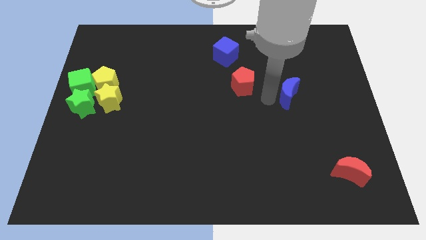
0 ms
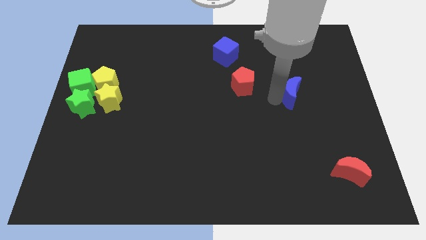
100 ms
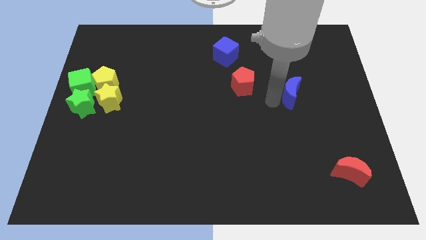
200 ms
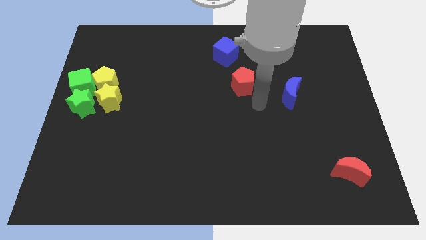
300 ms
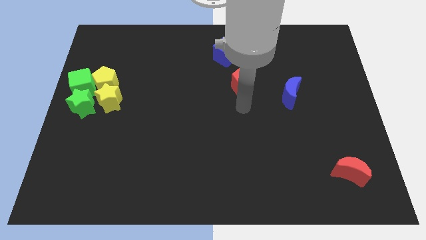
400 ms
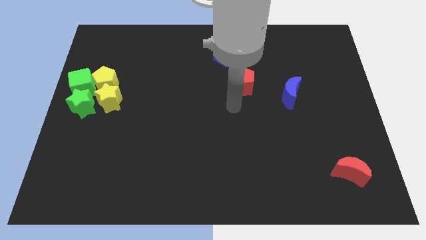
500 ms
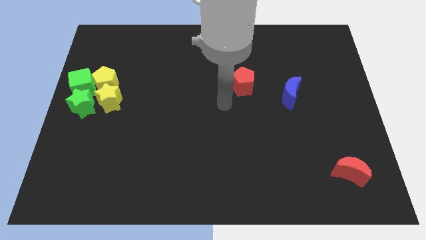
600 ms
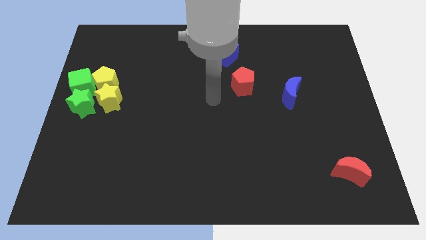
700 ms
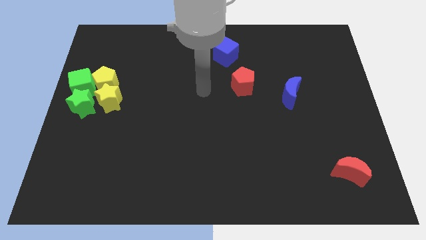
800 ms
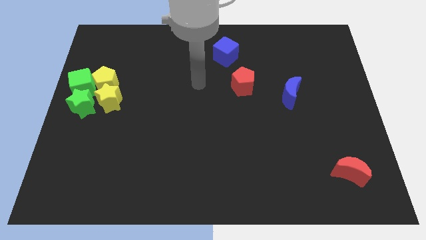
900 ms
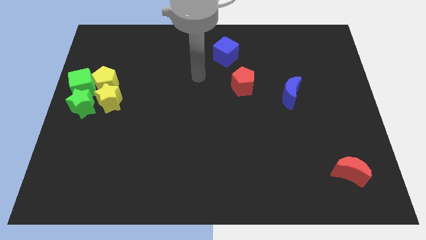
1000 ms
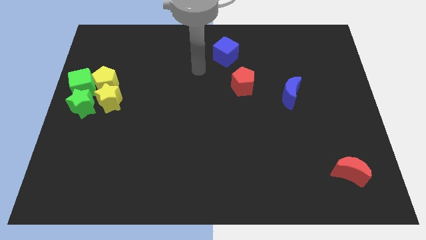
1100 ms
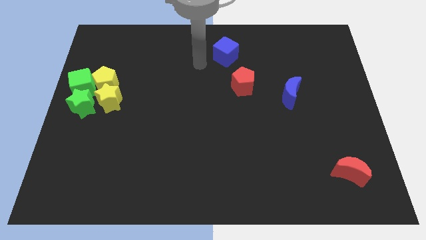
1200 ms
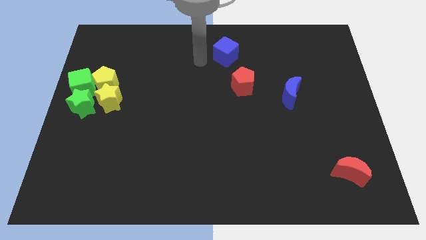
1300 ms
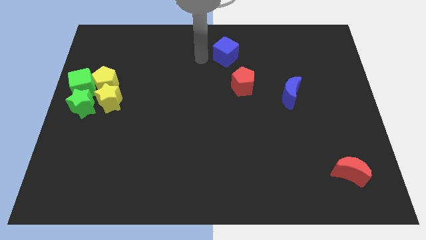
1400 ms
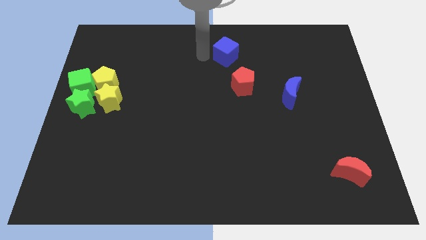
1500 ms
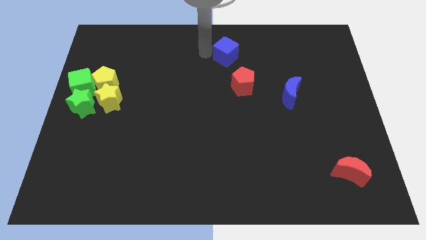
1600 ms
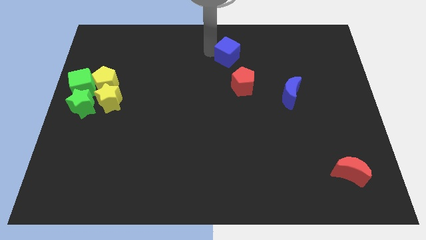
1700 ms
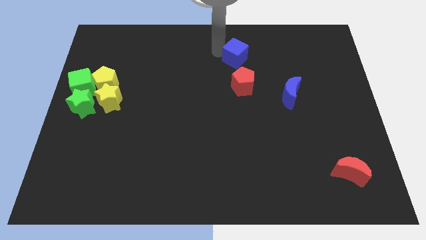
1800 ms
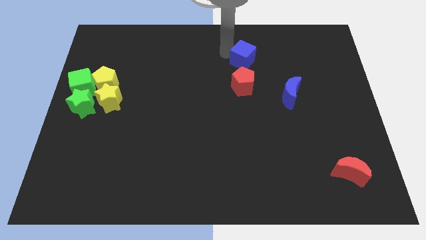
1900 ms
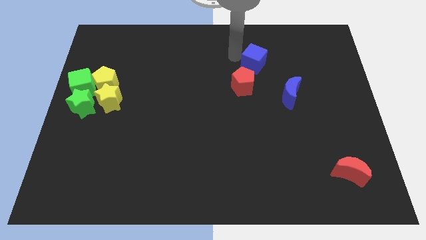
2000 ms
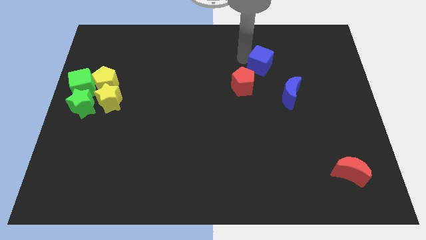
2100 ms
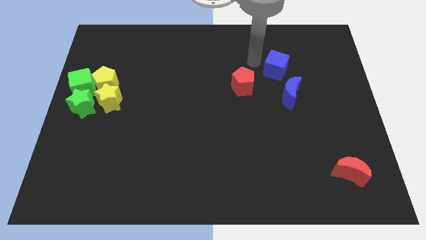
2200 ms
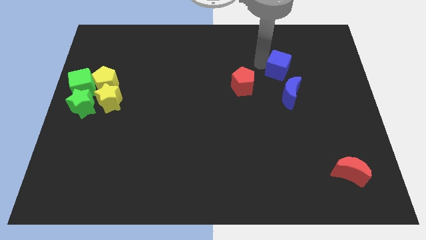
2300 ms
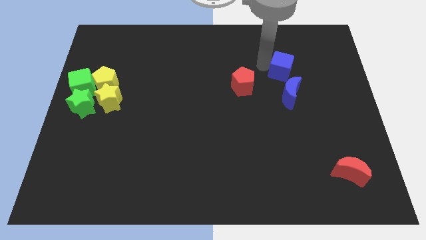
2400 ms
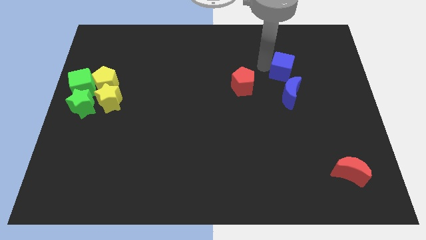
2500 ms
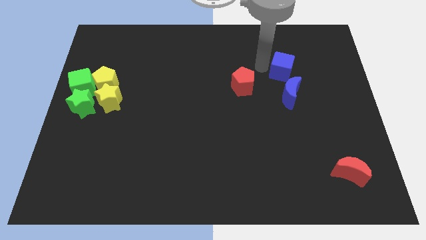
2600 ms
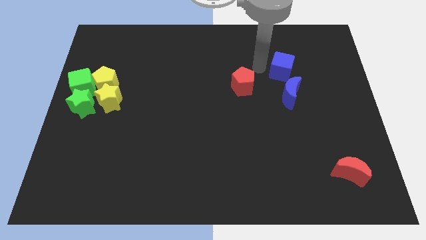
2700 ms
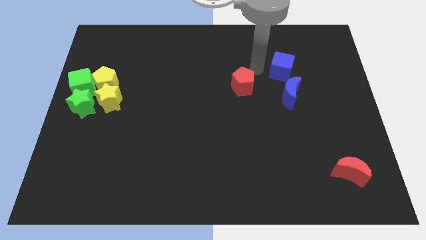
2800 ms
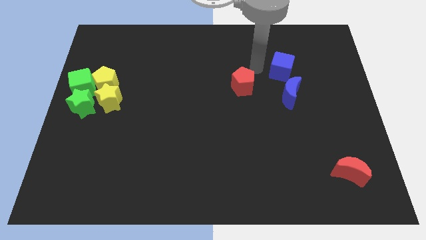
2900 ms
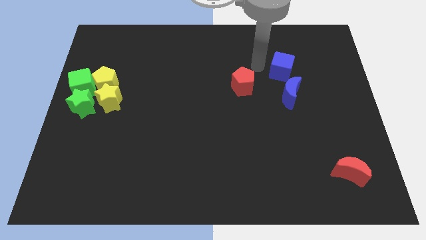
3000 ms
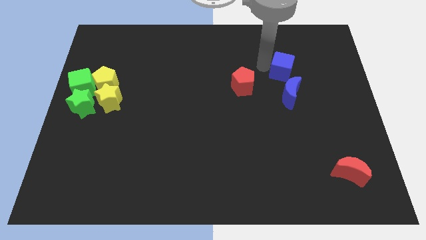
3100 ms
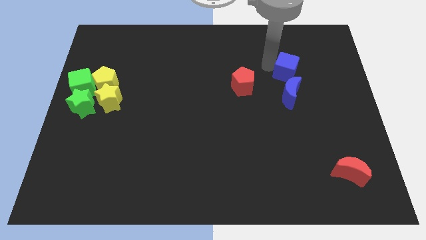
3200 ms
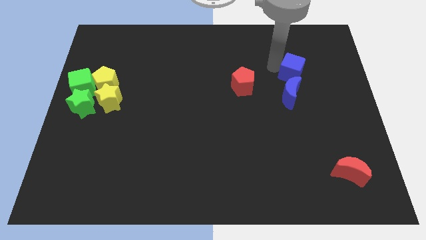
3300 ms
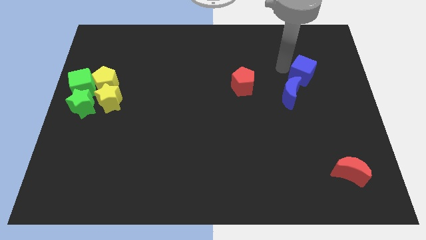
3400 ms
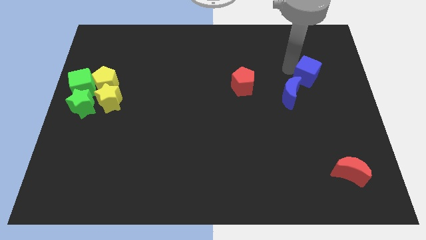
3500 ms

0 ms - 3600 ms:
push the blue cube towards the blue crescent

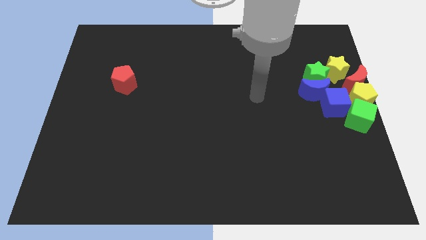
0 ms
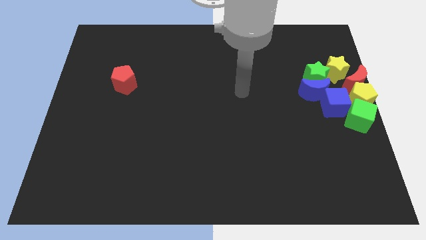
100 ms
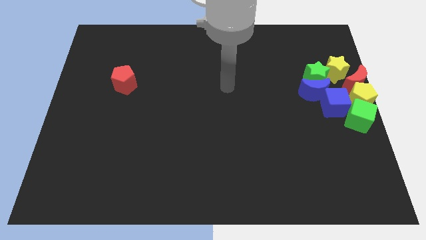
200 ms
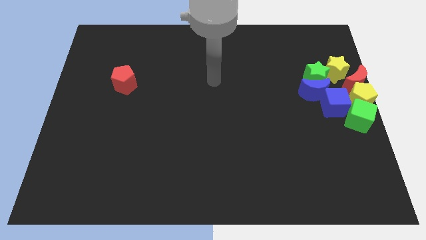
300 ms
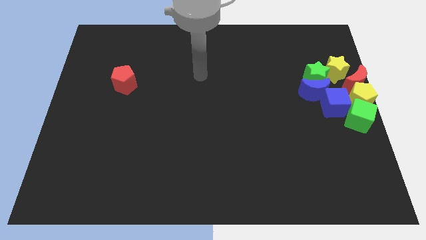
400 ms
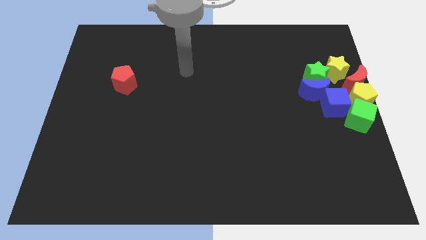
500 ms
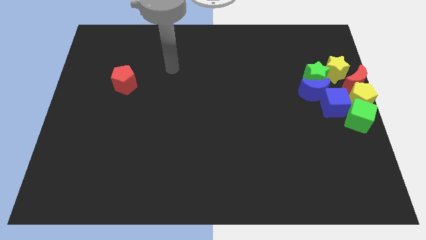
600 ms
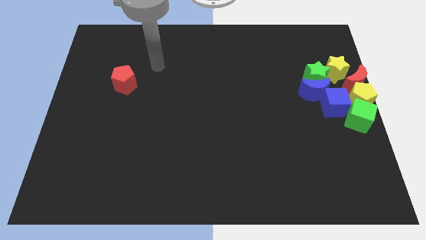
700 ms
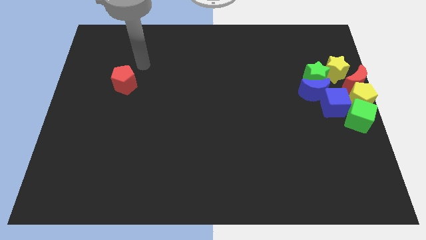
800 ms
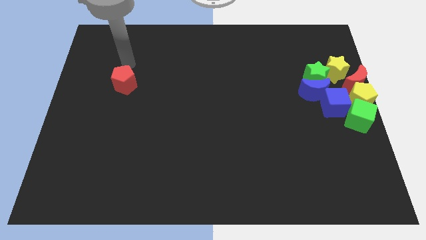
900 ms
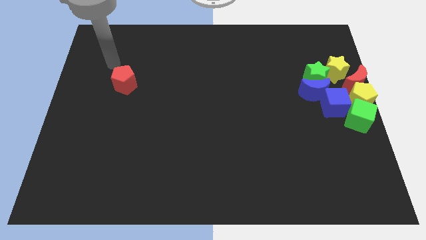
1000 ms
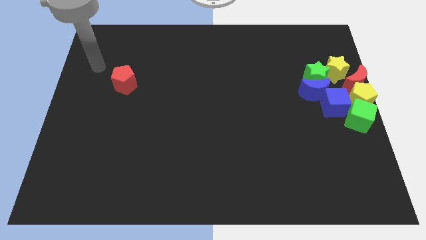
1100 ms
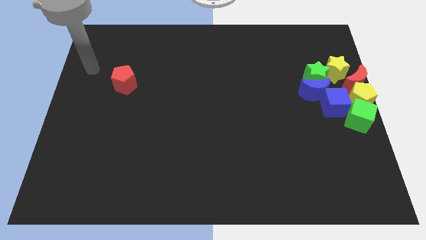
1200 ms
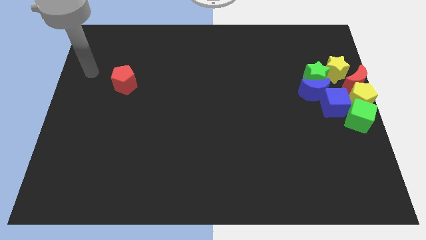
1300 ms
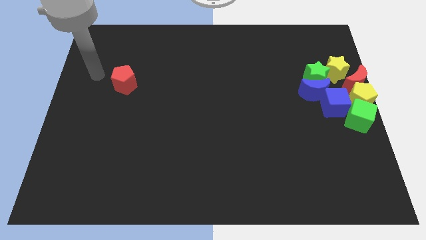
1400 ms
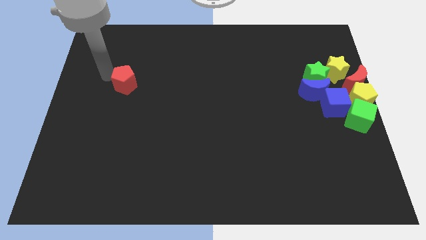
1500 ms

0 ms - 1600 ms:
move your arm towards the red pentagon

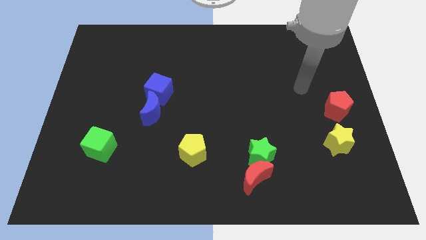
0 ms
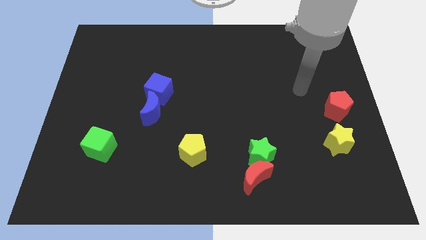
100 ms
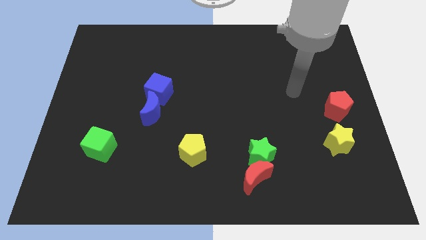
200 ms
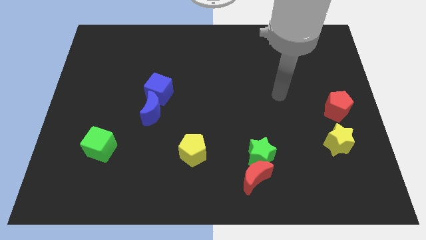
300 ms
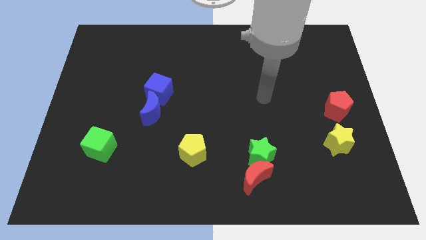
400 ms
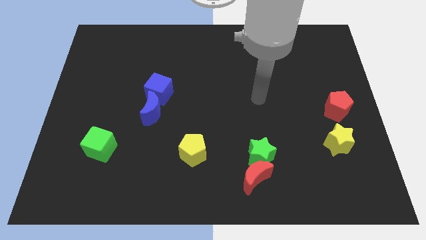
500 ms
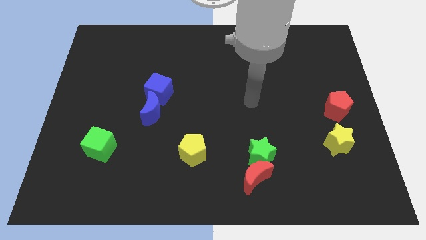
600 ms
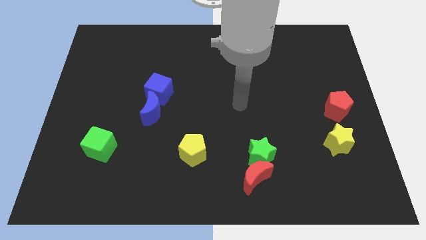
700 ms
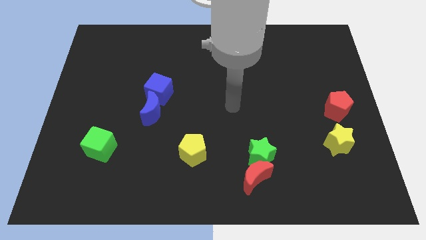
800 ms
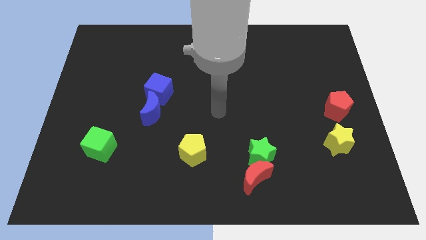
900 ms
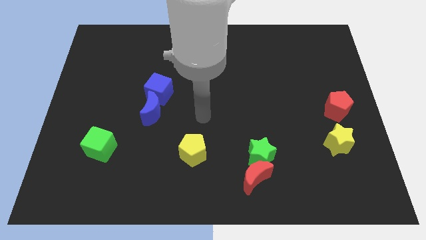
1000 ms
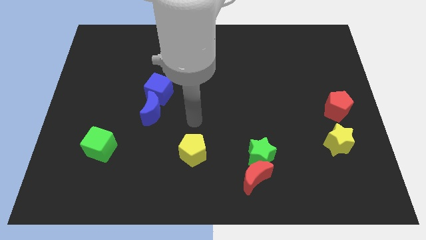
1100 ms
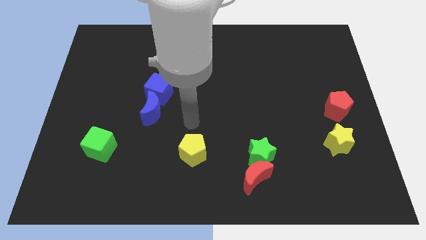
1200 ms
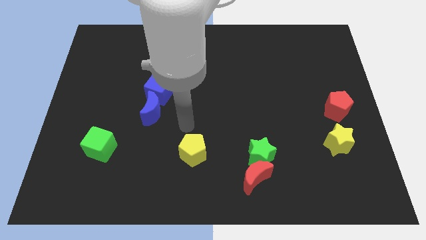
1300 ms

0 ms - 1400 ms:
point your arm at the top of yellow pentagon

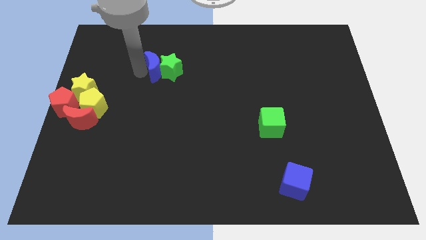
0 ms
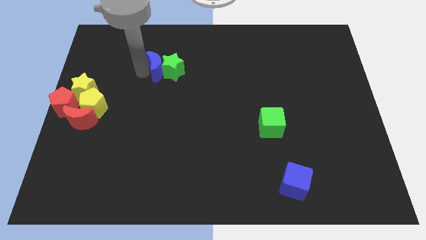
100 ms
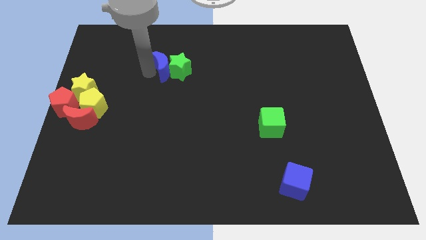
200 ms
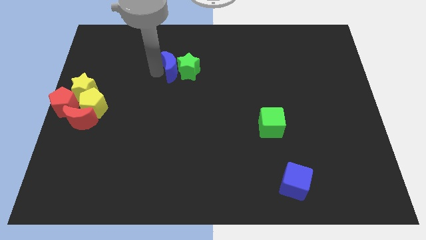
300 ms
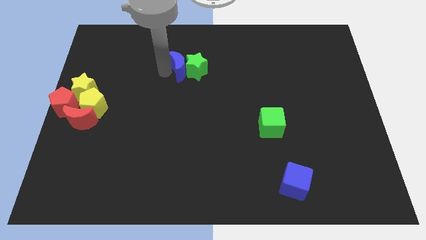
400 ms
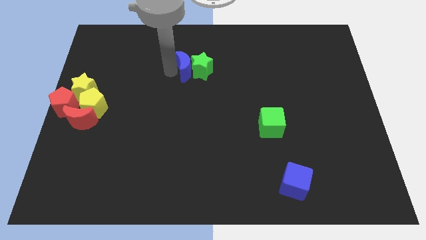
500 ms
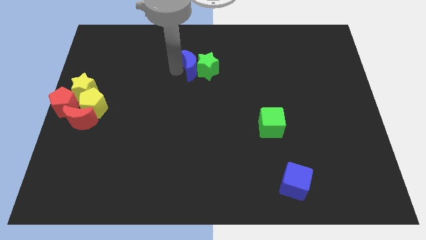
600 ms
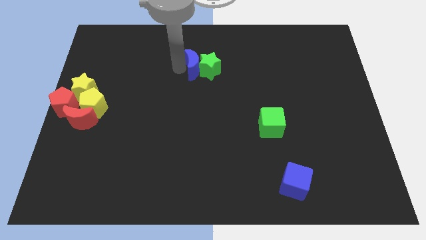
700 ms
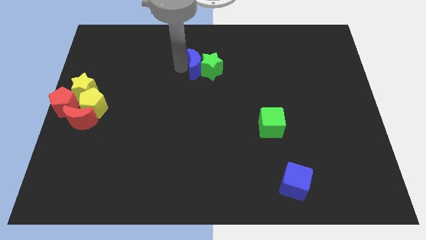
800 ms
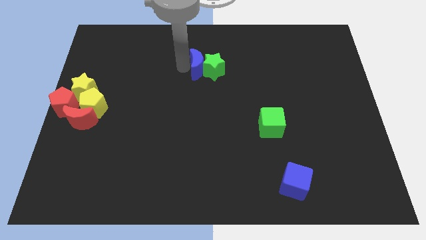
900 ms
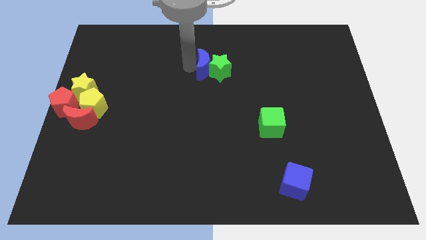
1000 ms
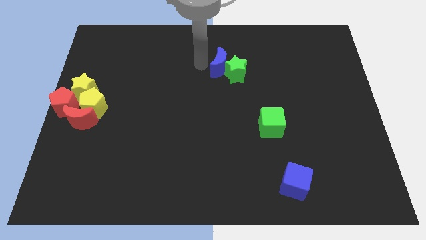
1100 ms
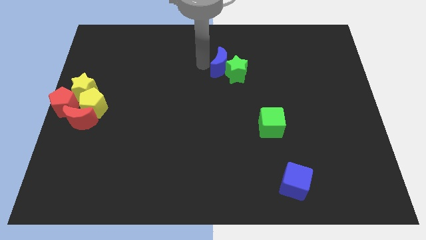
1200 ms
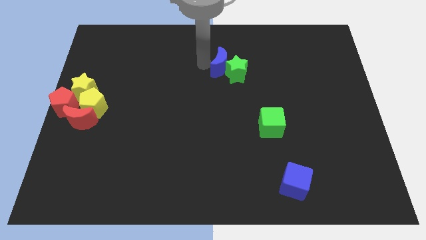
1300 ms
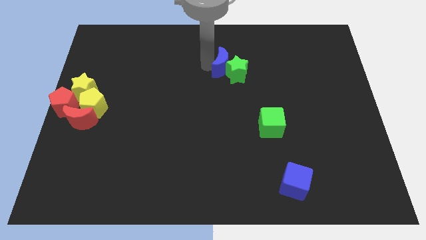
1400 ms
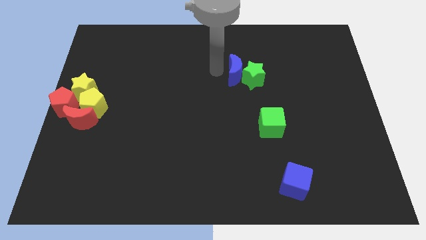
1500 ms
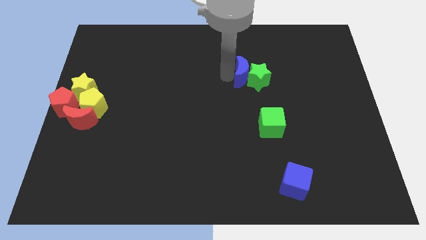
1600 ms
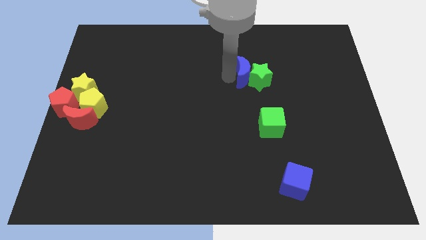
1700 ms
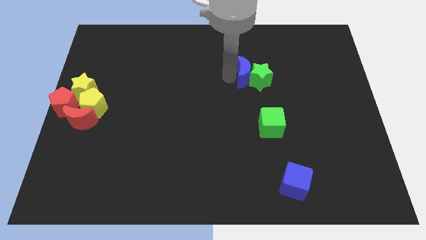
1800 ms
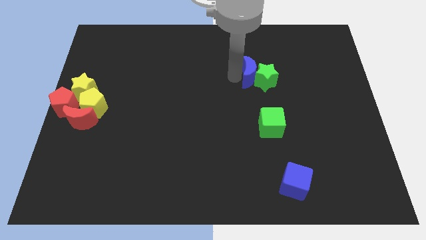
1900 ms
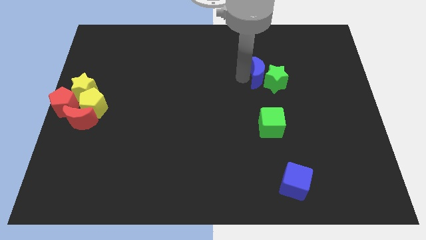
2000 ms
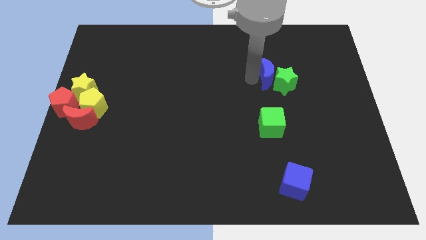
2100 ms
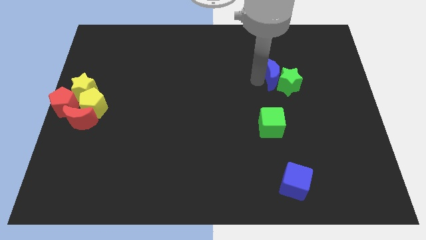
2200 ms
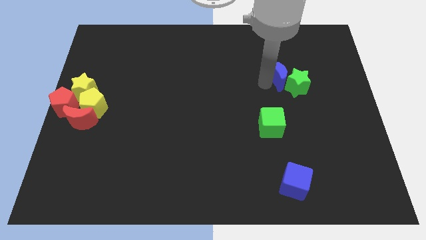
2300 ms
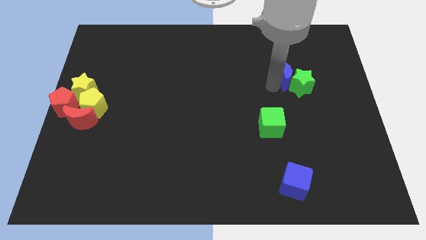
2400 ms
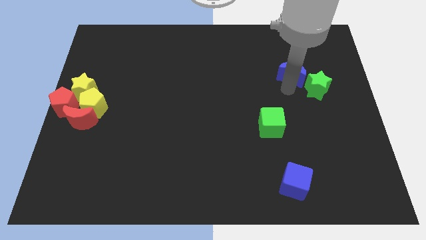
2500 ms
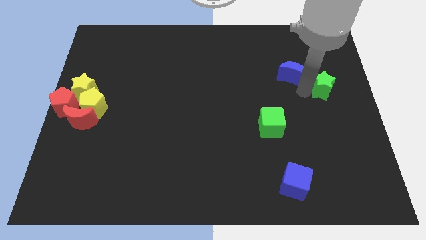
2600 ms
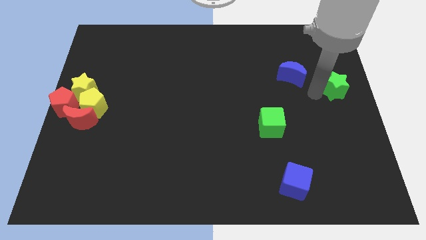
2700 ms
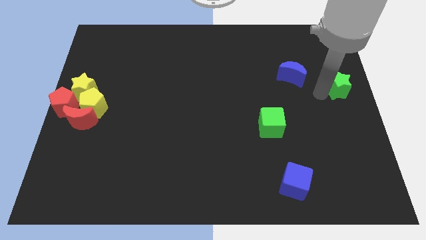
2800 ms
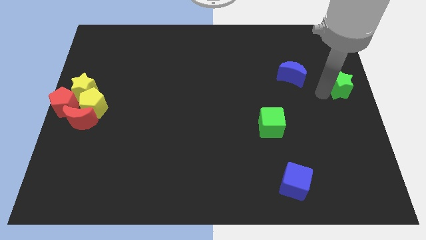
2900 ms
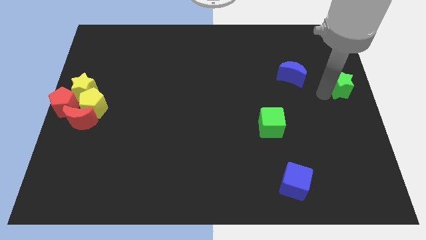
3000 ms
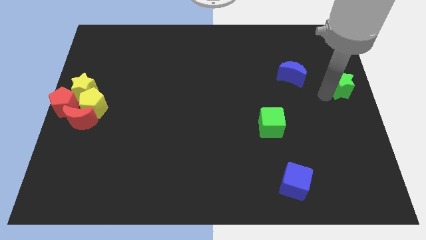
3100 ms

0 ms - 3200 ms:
push the blue moon and green star to the right
